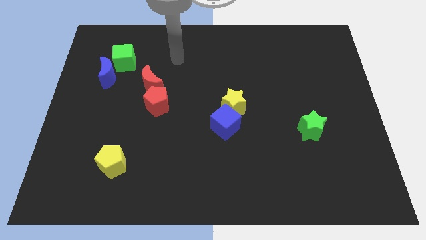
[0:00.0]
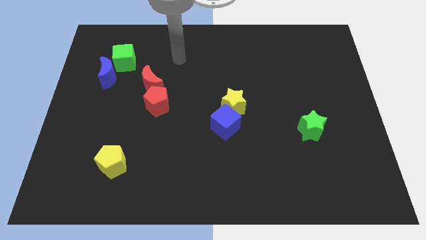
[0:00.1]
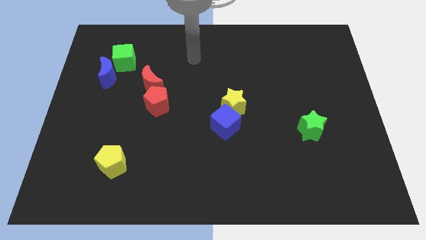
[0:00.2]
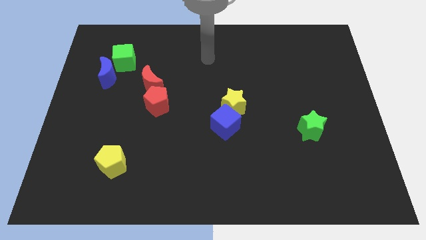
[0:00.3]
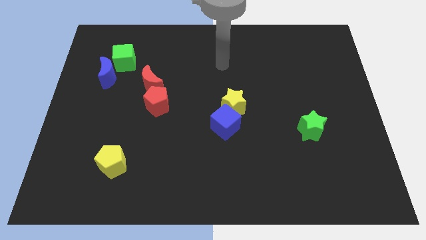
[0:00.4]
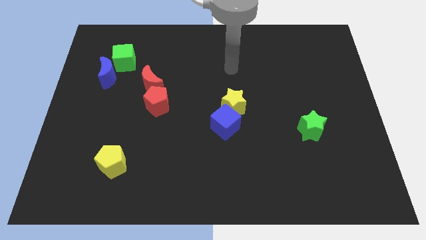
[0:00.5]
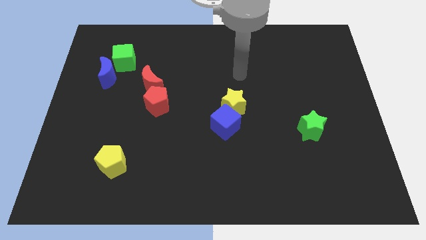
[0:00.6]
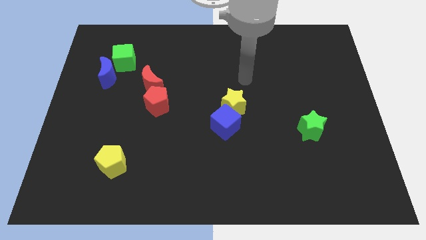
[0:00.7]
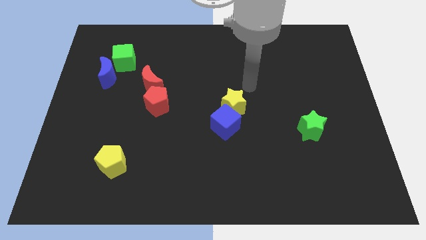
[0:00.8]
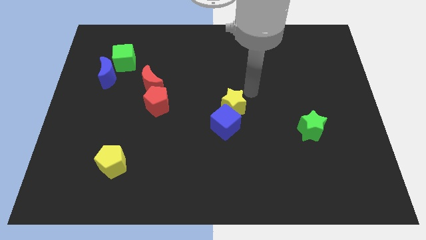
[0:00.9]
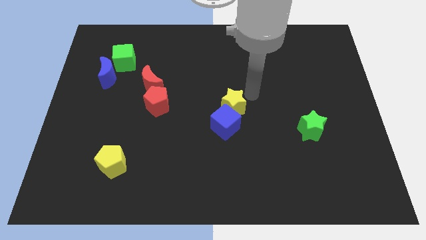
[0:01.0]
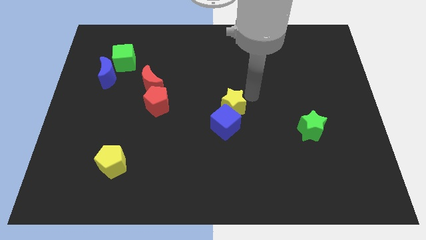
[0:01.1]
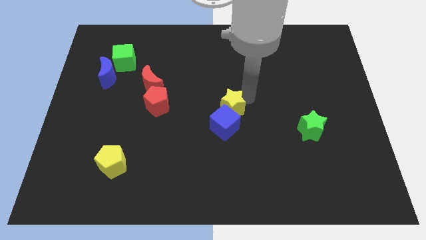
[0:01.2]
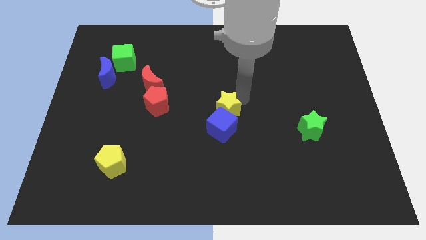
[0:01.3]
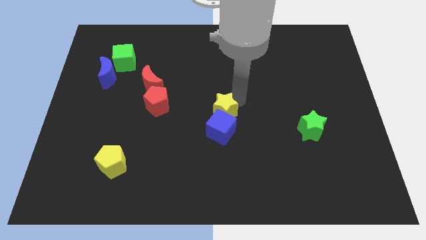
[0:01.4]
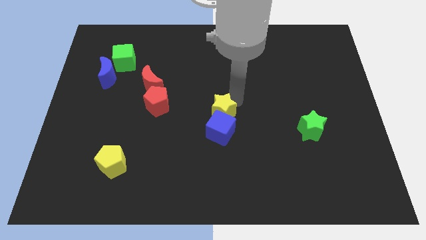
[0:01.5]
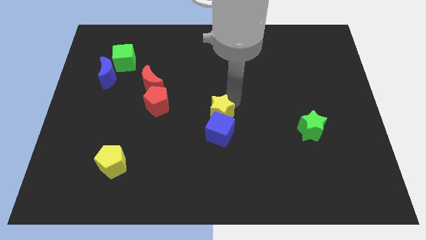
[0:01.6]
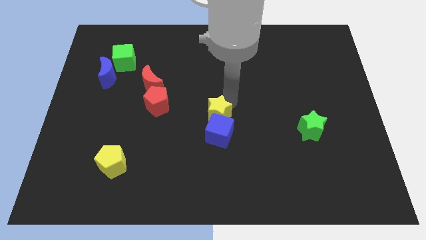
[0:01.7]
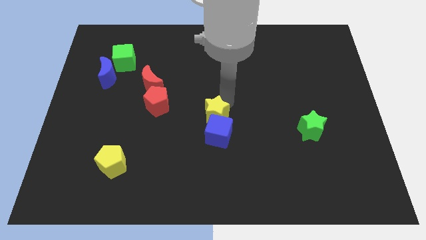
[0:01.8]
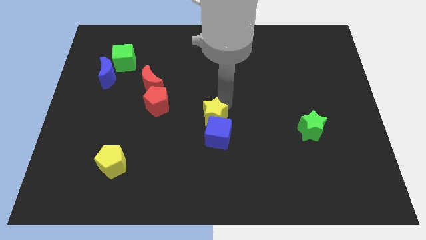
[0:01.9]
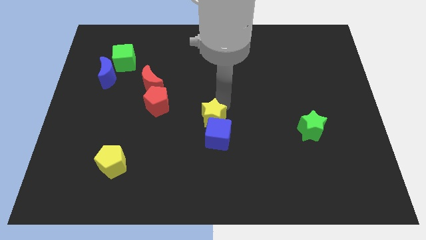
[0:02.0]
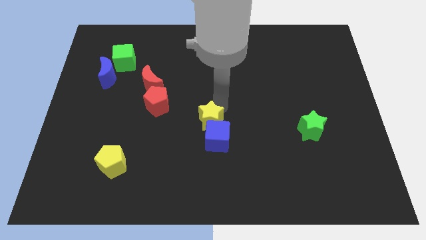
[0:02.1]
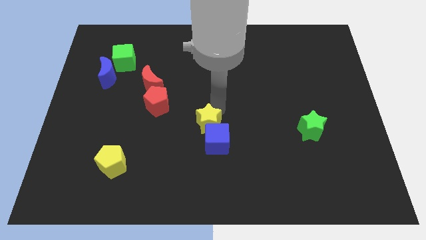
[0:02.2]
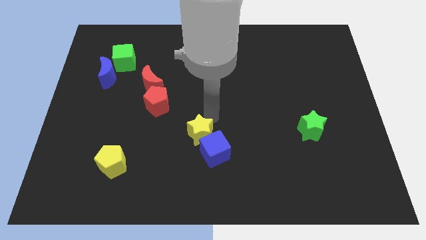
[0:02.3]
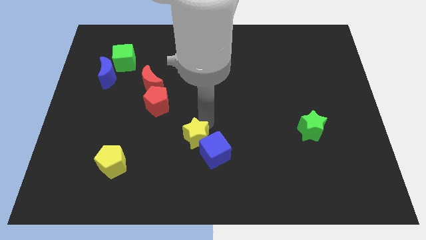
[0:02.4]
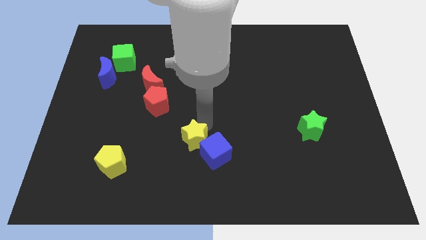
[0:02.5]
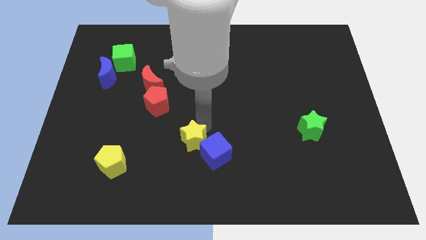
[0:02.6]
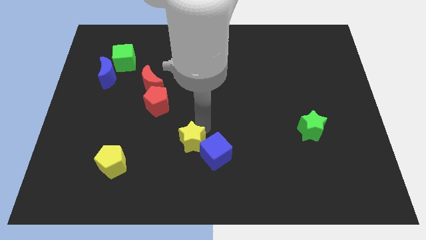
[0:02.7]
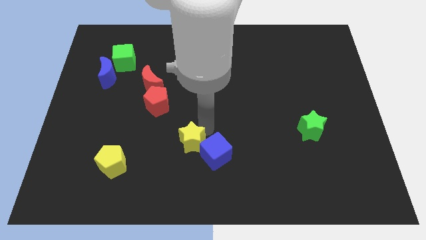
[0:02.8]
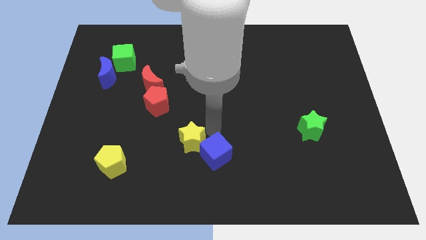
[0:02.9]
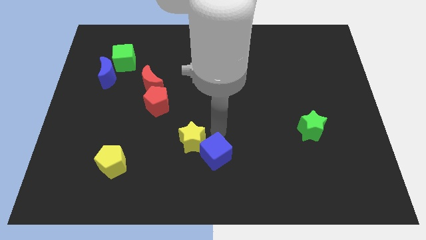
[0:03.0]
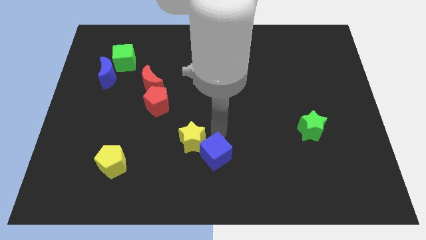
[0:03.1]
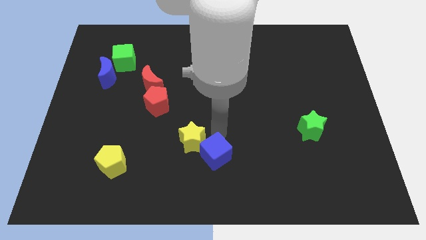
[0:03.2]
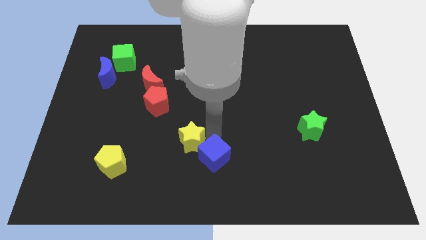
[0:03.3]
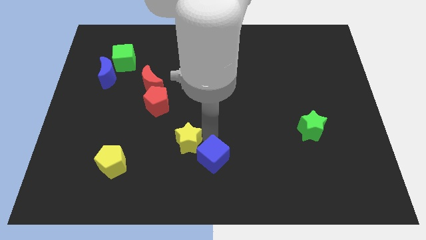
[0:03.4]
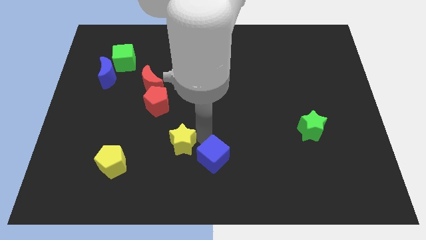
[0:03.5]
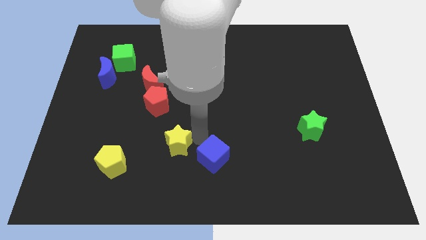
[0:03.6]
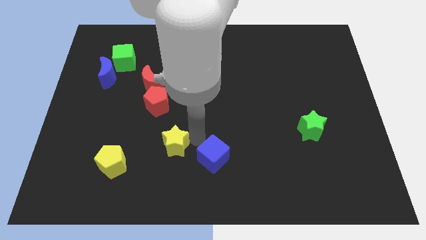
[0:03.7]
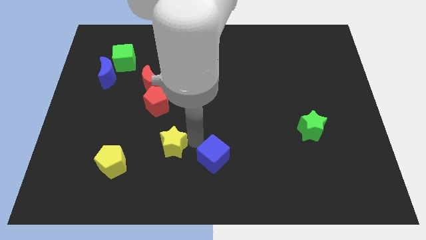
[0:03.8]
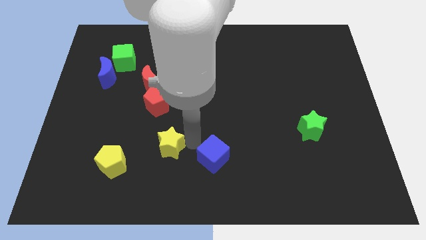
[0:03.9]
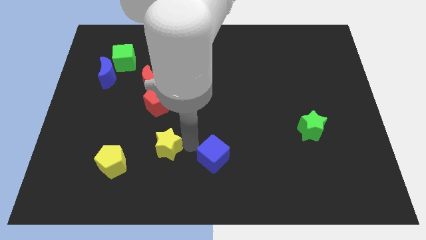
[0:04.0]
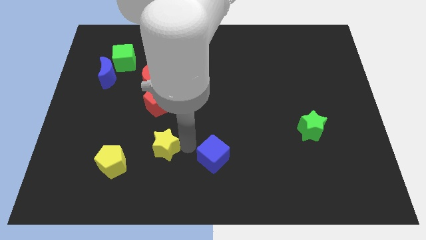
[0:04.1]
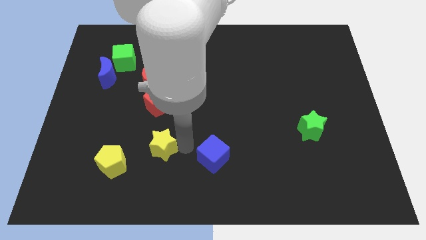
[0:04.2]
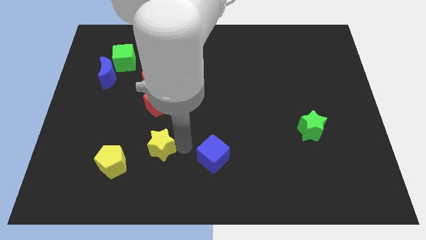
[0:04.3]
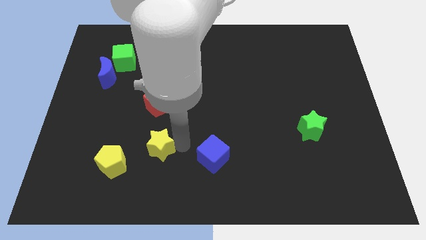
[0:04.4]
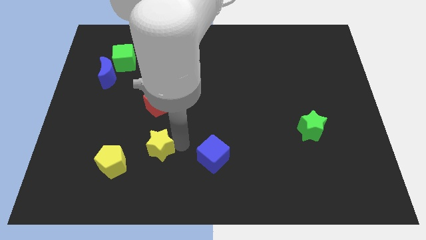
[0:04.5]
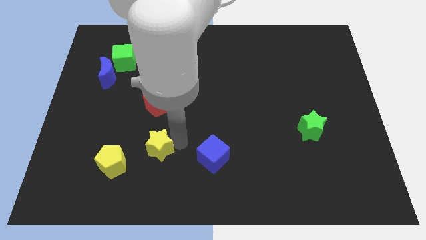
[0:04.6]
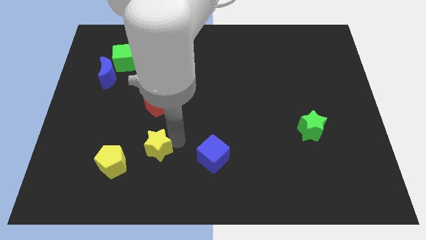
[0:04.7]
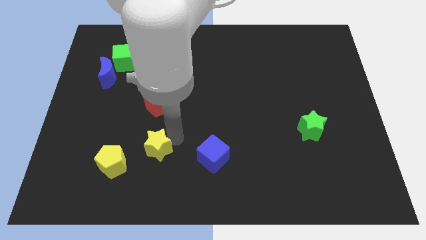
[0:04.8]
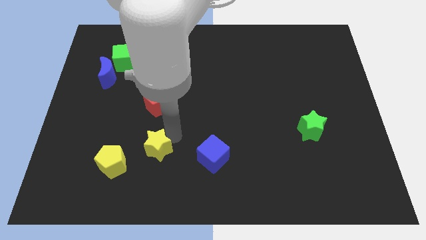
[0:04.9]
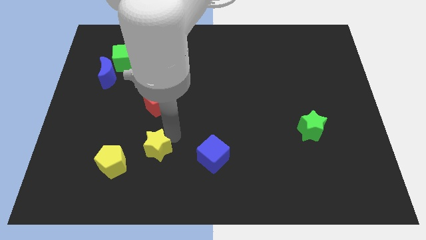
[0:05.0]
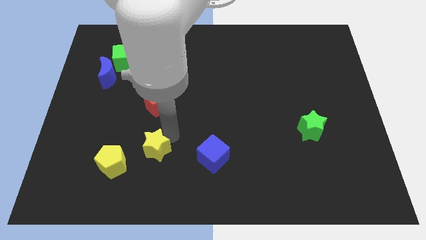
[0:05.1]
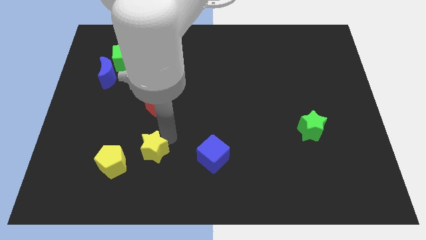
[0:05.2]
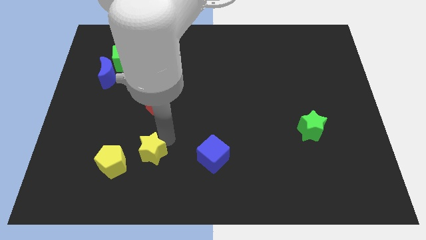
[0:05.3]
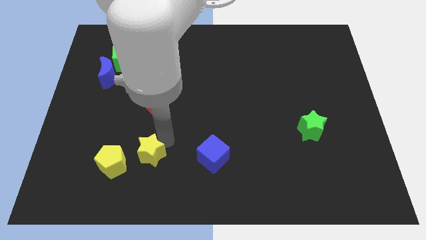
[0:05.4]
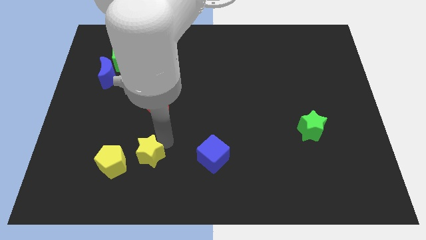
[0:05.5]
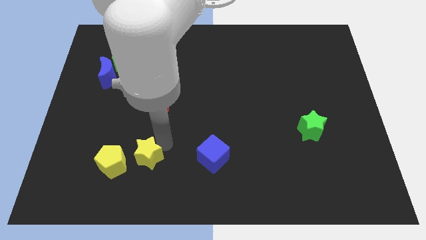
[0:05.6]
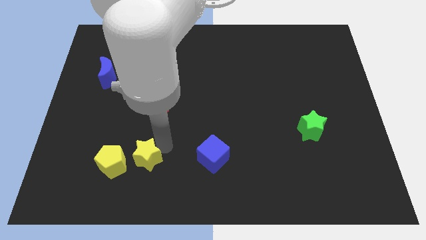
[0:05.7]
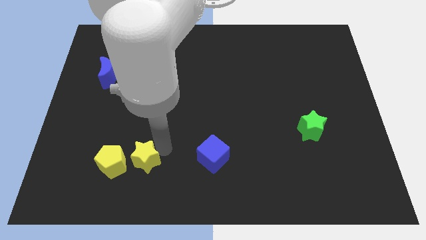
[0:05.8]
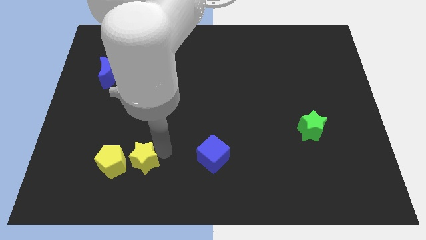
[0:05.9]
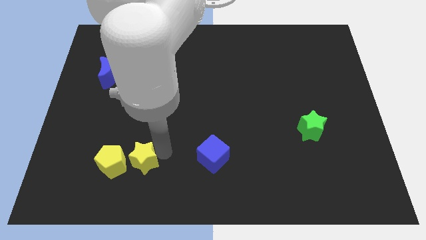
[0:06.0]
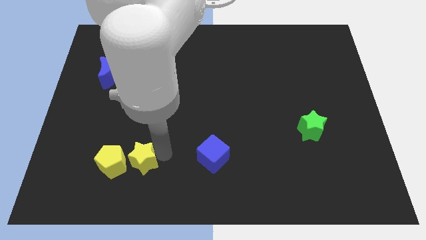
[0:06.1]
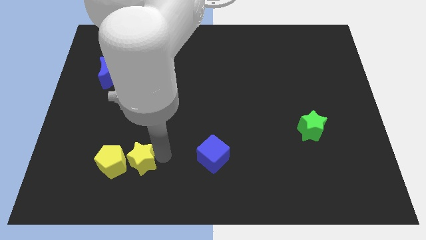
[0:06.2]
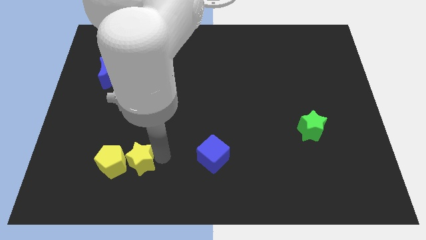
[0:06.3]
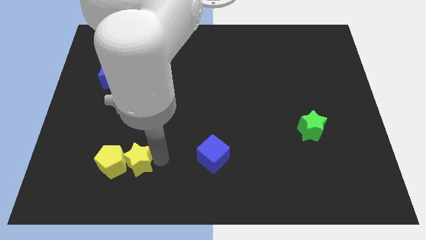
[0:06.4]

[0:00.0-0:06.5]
move the yellow star to the yellow pentagon

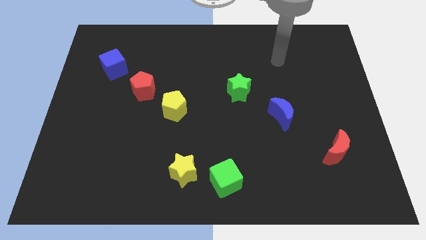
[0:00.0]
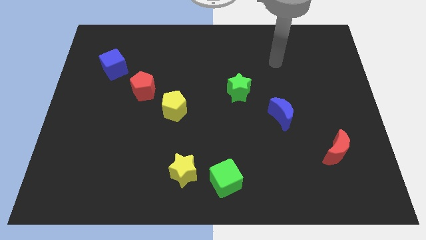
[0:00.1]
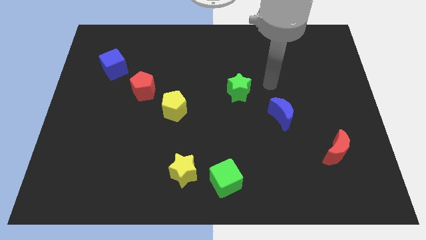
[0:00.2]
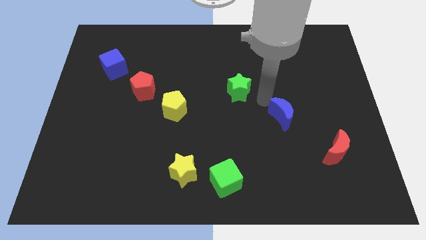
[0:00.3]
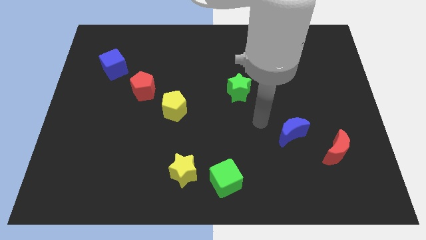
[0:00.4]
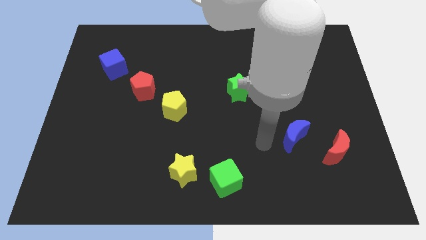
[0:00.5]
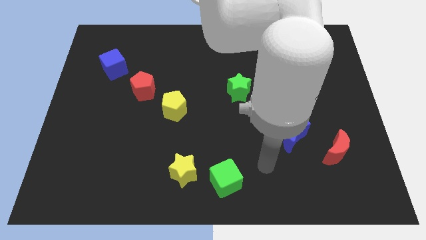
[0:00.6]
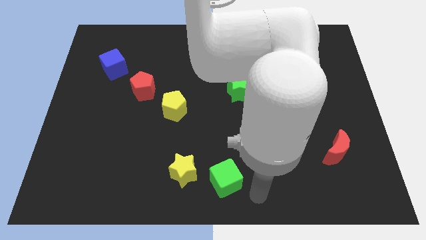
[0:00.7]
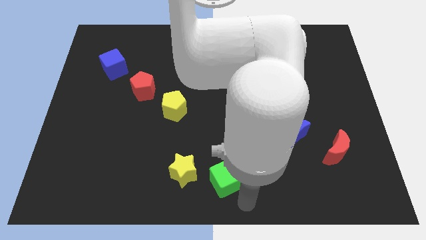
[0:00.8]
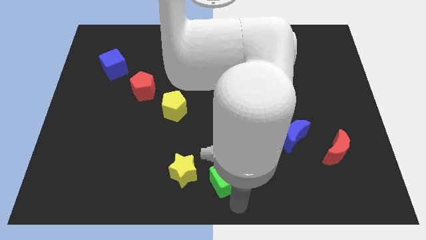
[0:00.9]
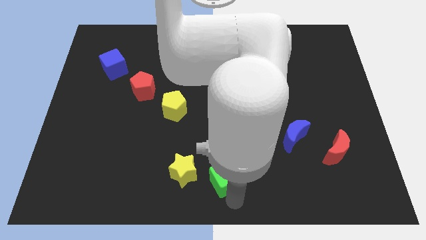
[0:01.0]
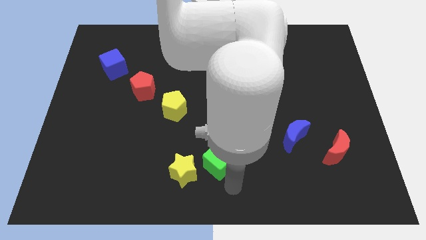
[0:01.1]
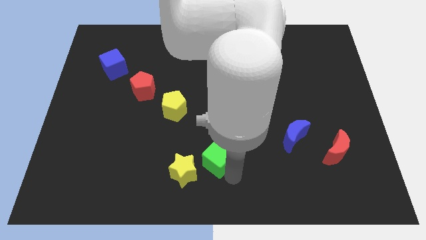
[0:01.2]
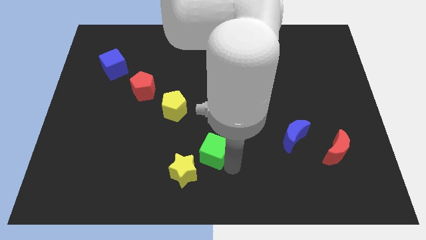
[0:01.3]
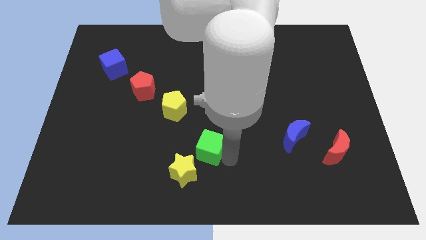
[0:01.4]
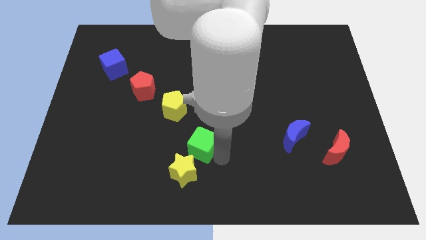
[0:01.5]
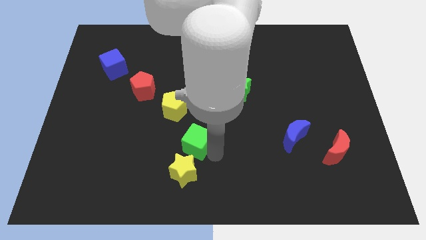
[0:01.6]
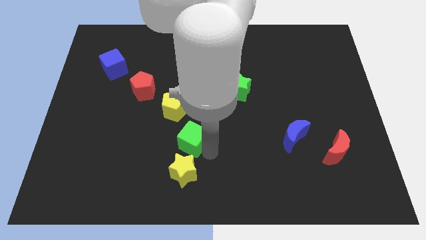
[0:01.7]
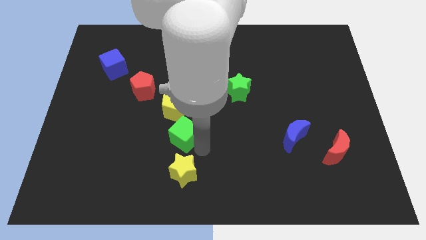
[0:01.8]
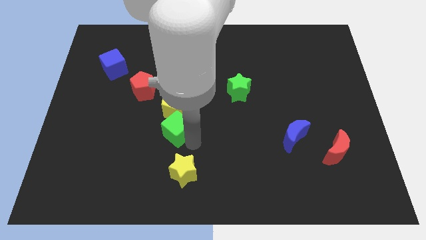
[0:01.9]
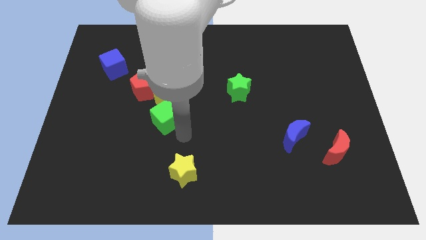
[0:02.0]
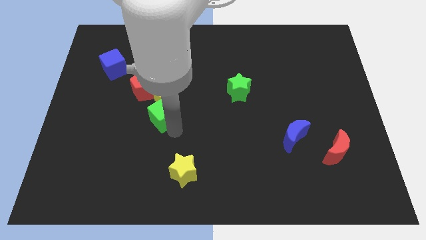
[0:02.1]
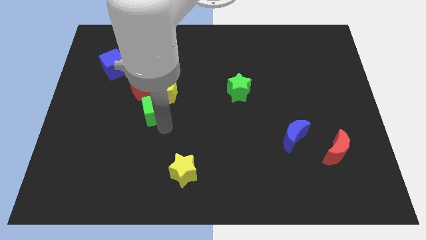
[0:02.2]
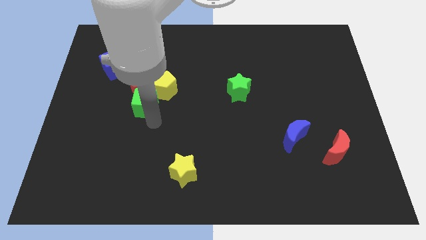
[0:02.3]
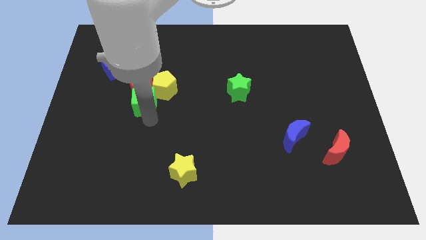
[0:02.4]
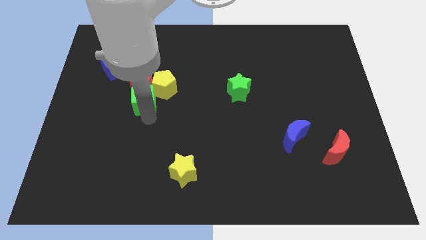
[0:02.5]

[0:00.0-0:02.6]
move the green cube close to the red pentagon
